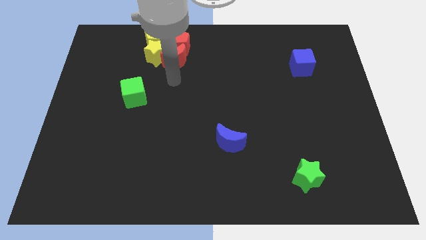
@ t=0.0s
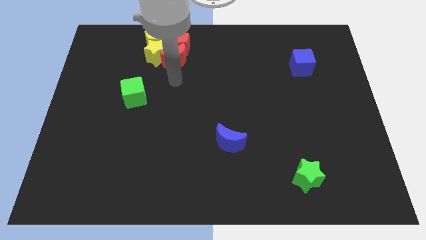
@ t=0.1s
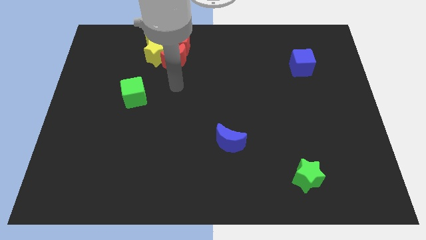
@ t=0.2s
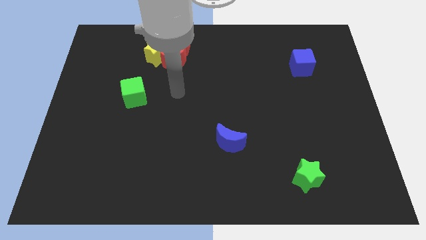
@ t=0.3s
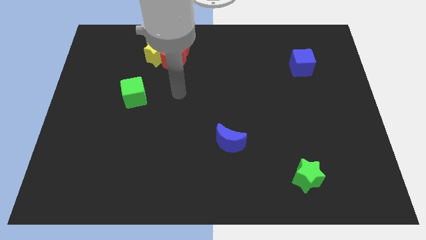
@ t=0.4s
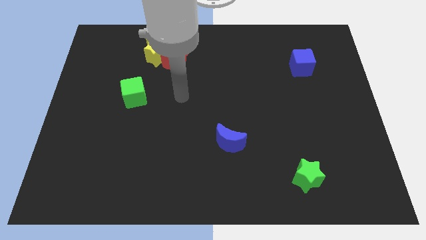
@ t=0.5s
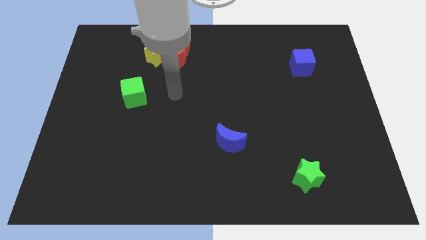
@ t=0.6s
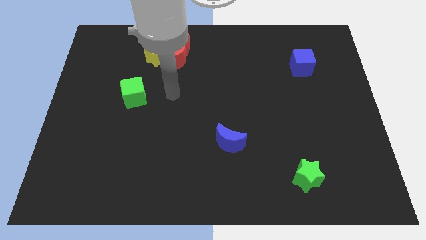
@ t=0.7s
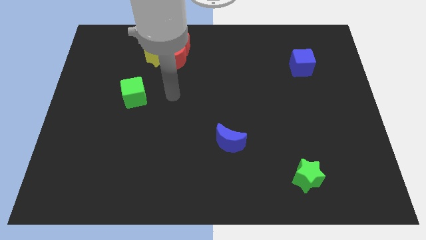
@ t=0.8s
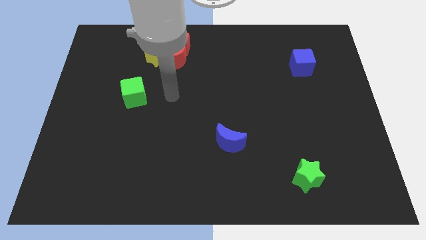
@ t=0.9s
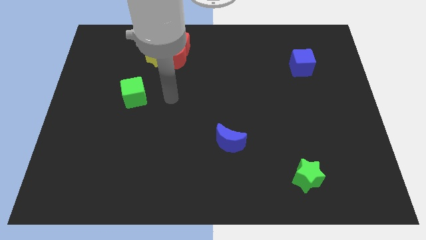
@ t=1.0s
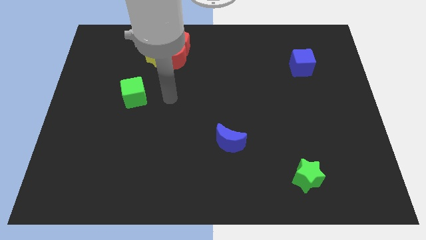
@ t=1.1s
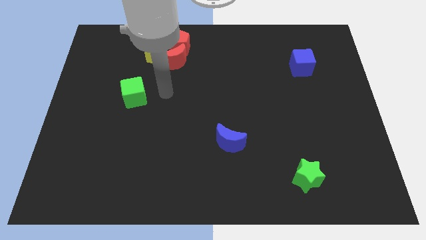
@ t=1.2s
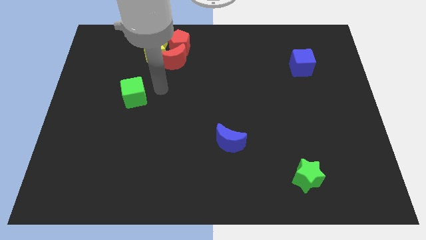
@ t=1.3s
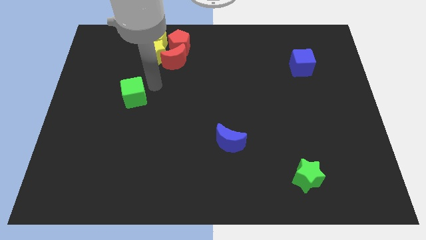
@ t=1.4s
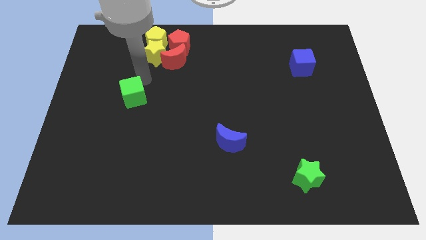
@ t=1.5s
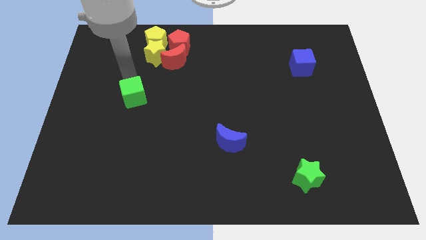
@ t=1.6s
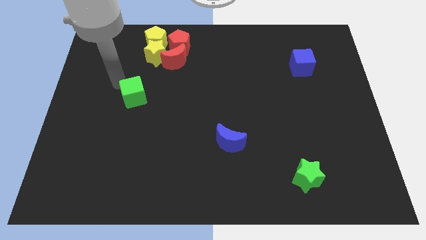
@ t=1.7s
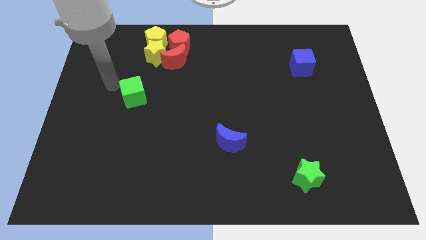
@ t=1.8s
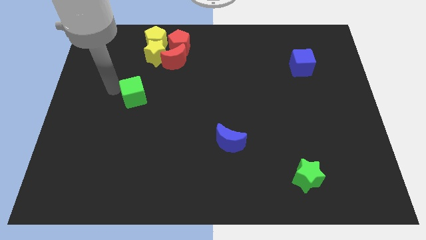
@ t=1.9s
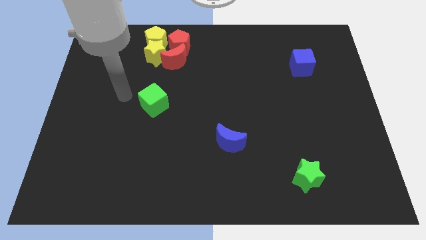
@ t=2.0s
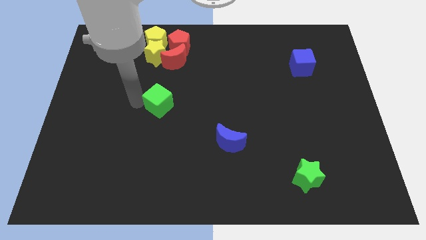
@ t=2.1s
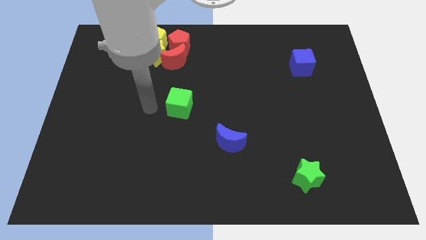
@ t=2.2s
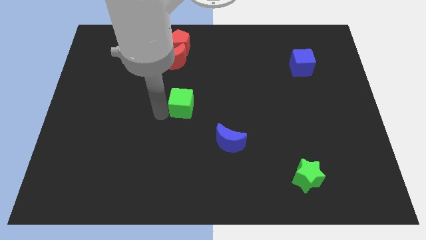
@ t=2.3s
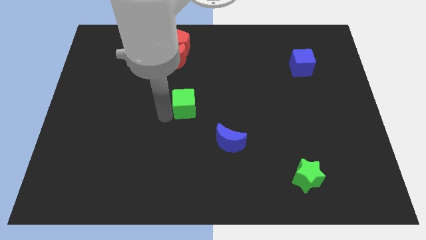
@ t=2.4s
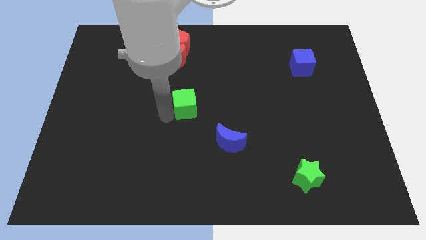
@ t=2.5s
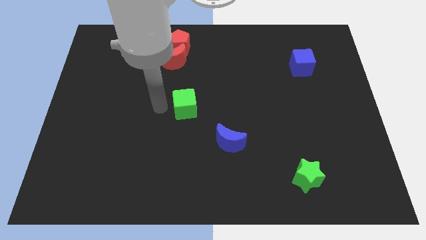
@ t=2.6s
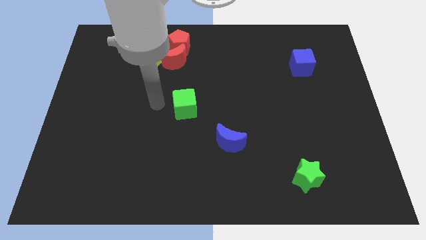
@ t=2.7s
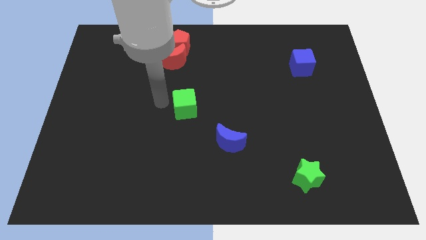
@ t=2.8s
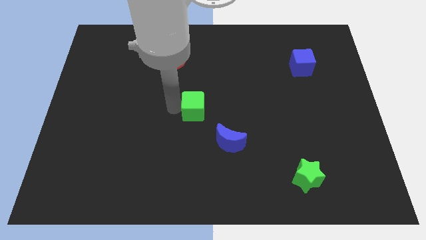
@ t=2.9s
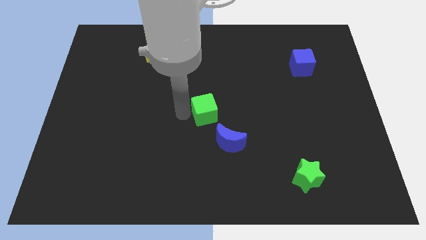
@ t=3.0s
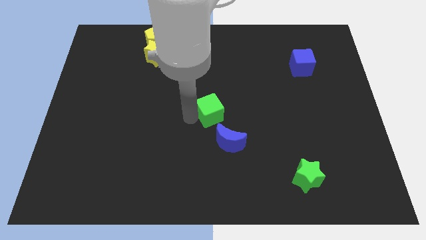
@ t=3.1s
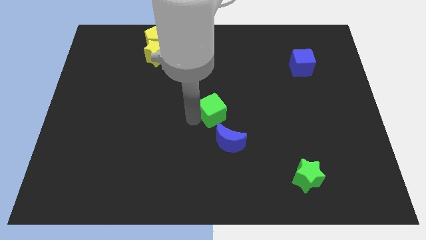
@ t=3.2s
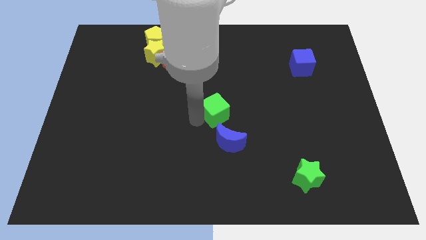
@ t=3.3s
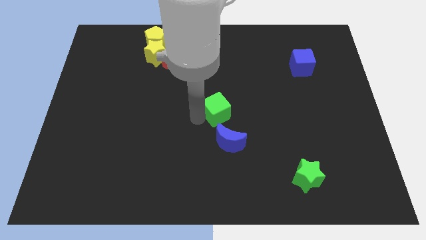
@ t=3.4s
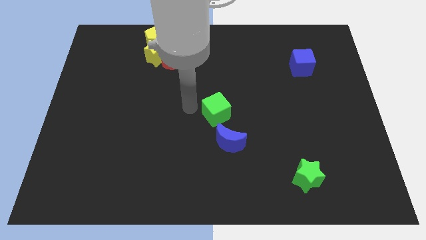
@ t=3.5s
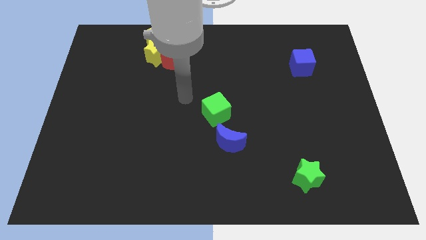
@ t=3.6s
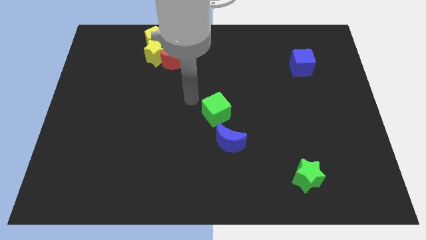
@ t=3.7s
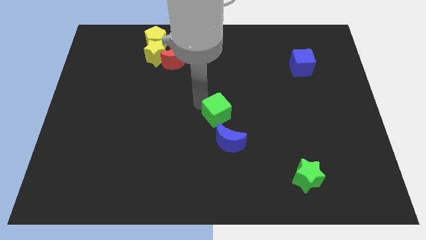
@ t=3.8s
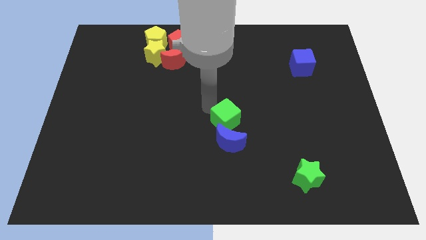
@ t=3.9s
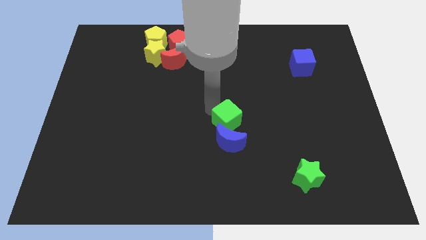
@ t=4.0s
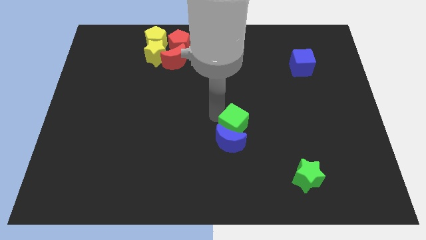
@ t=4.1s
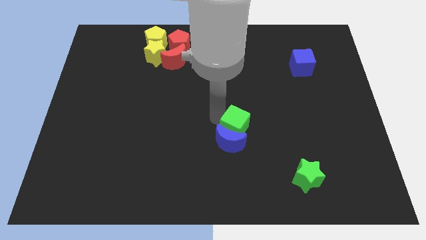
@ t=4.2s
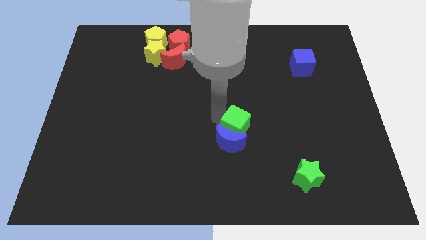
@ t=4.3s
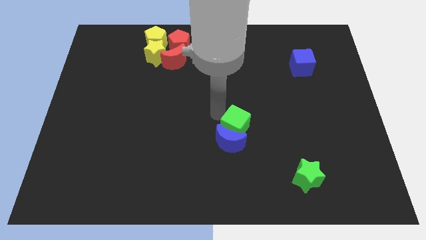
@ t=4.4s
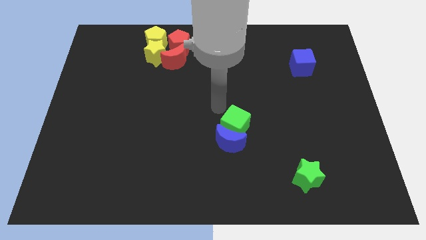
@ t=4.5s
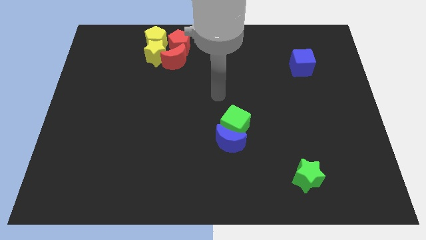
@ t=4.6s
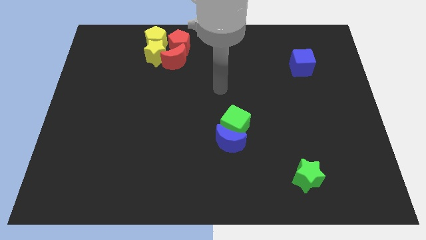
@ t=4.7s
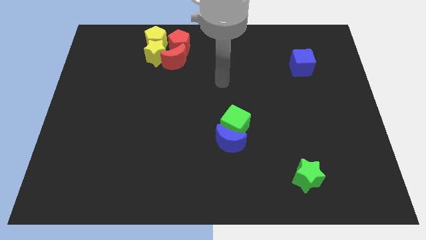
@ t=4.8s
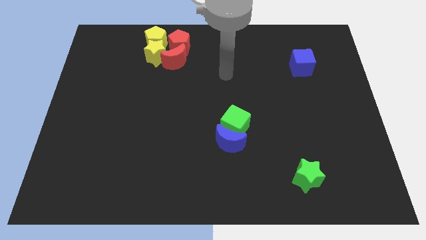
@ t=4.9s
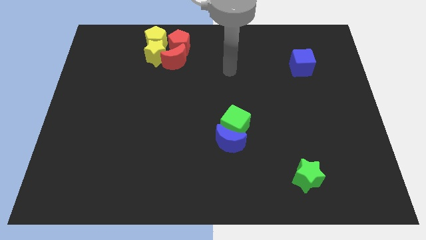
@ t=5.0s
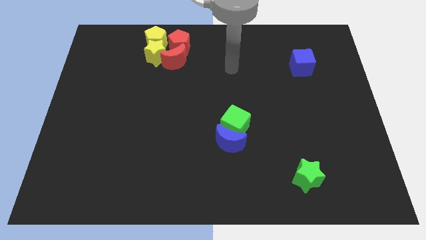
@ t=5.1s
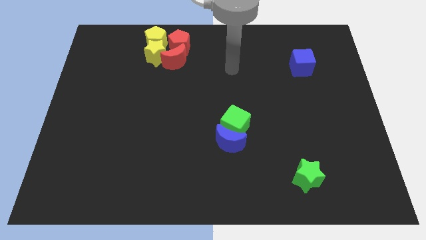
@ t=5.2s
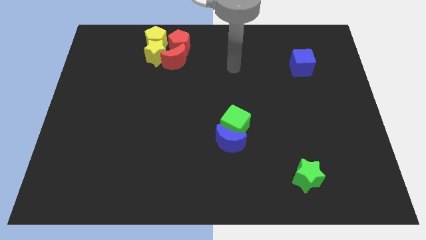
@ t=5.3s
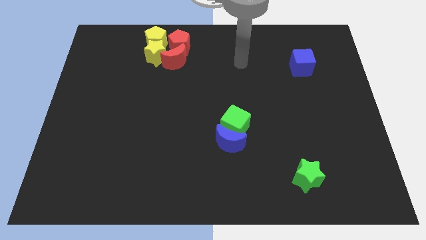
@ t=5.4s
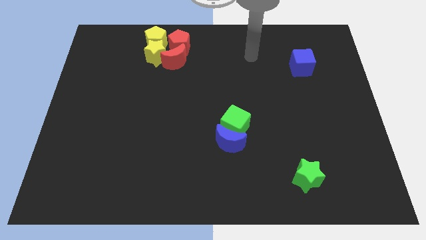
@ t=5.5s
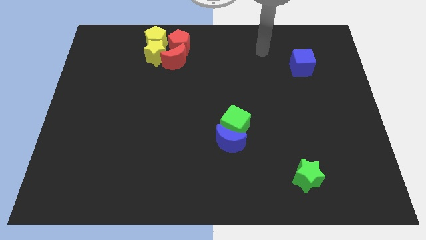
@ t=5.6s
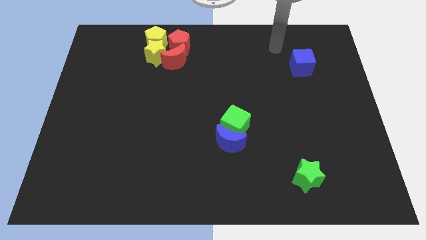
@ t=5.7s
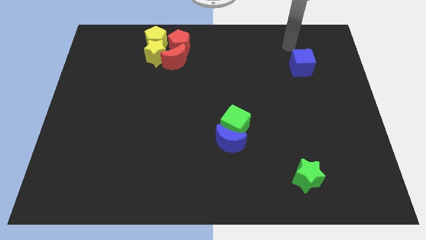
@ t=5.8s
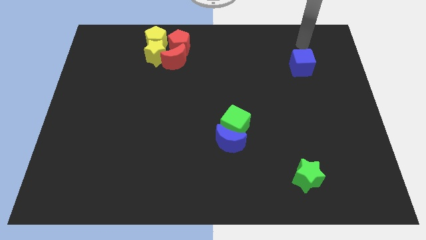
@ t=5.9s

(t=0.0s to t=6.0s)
place the green cube at the center of the board

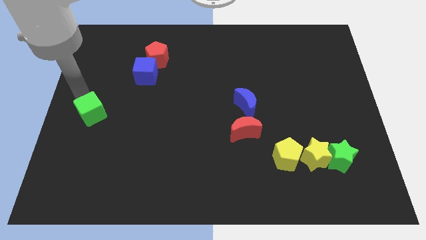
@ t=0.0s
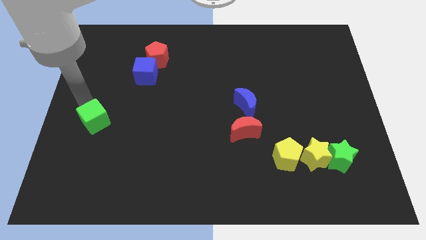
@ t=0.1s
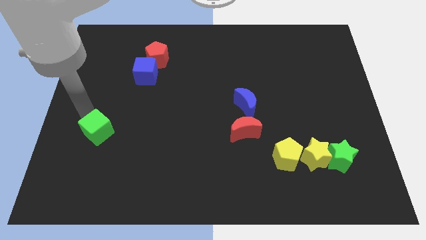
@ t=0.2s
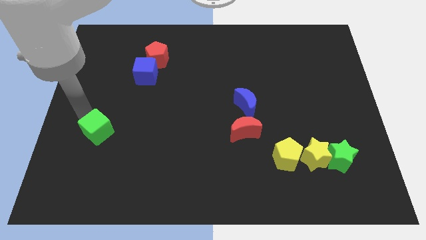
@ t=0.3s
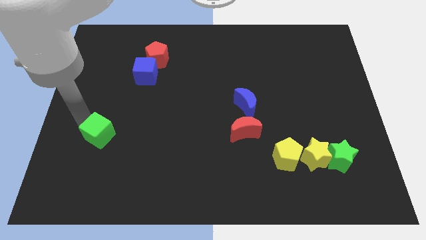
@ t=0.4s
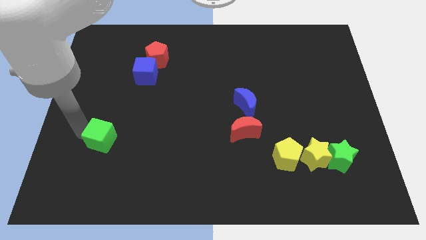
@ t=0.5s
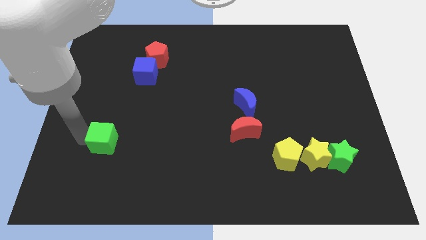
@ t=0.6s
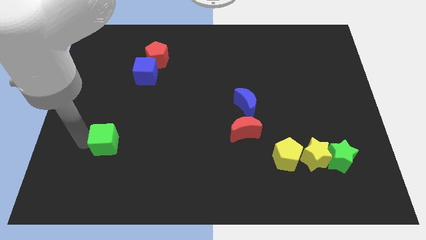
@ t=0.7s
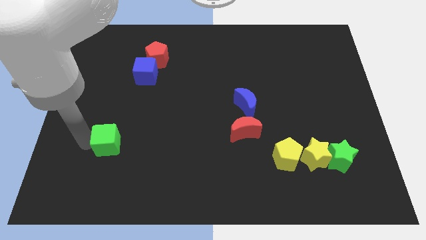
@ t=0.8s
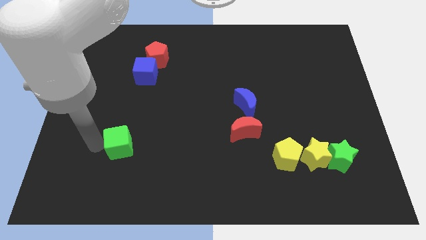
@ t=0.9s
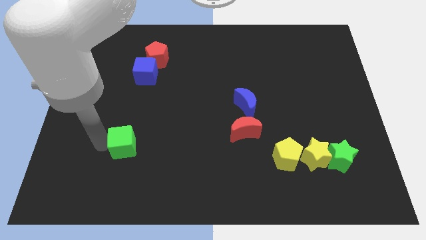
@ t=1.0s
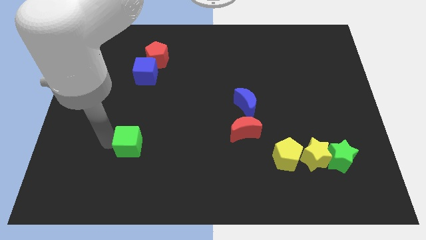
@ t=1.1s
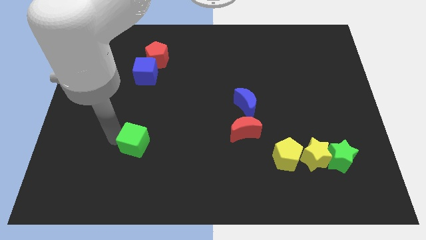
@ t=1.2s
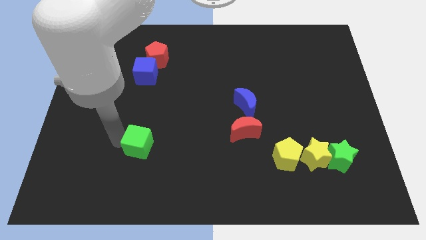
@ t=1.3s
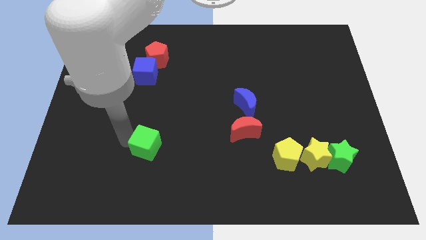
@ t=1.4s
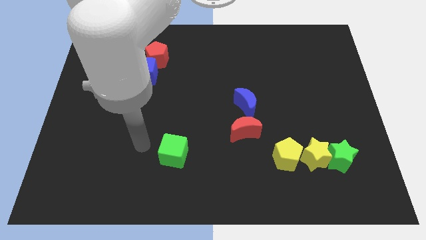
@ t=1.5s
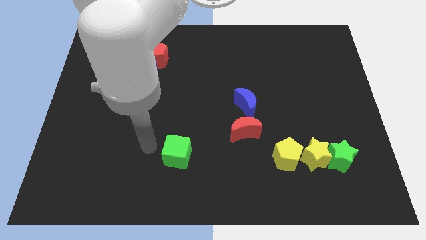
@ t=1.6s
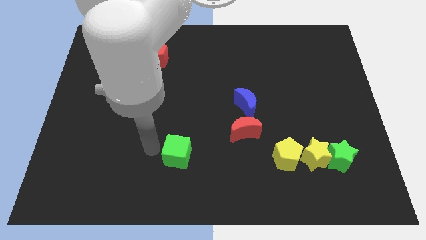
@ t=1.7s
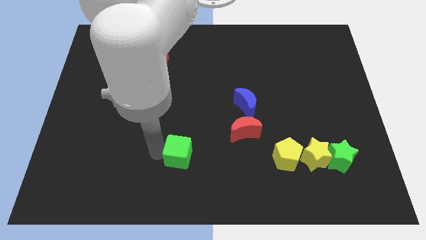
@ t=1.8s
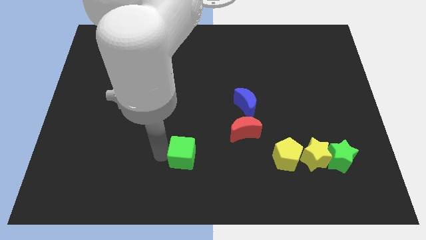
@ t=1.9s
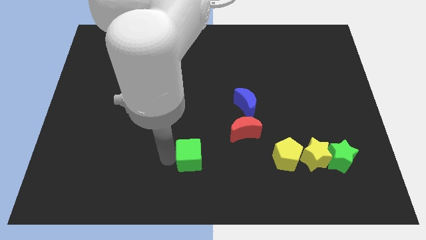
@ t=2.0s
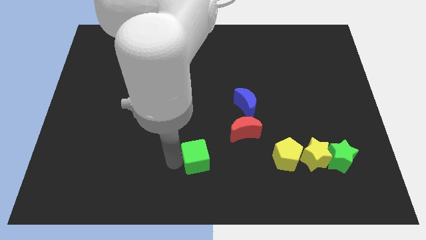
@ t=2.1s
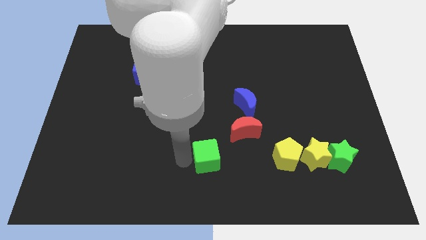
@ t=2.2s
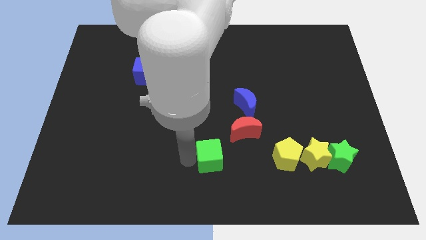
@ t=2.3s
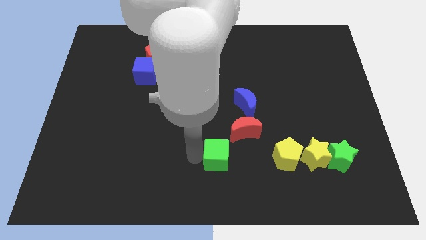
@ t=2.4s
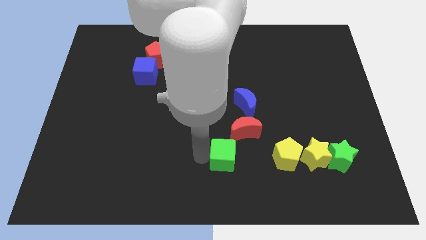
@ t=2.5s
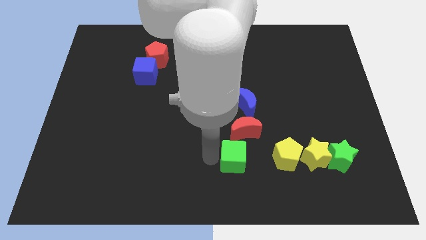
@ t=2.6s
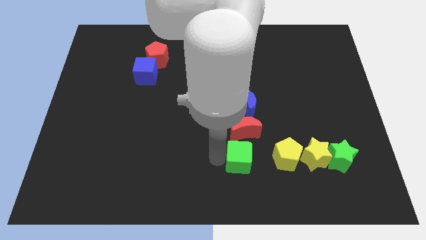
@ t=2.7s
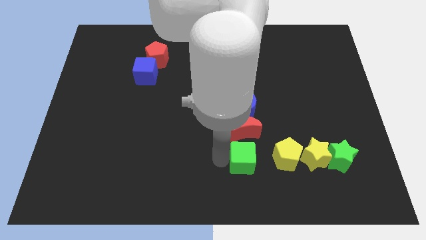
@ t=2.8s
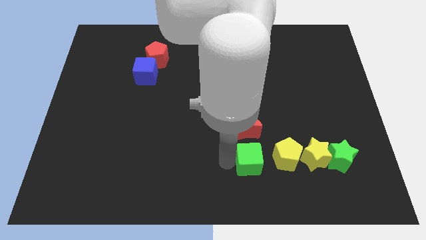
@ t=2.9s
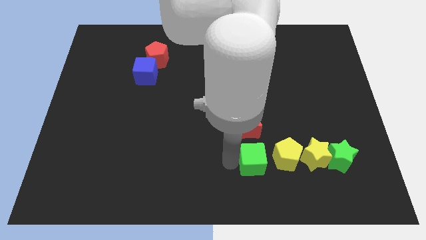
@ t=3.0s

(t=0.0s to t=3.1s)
put green cube below red crescent
